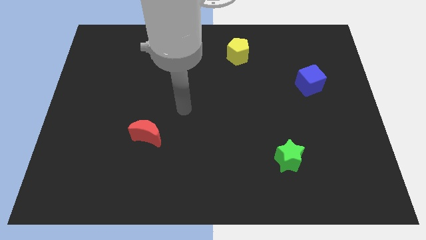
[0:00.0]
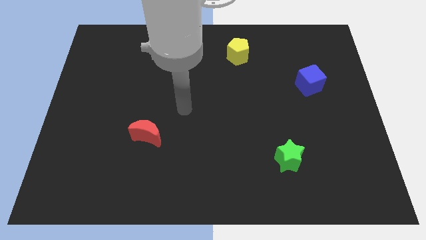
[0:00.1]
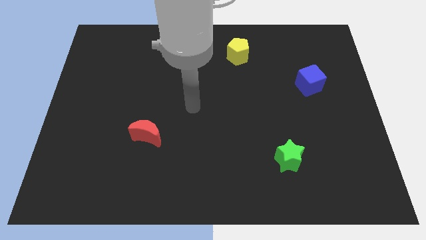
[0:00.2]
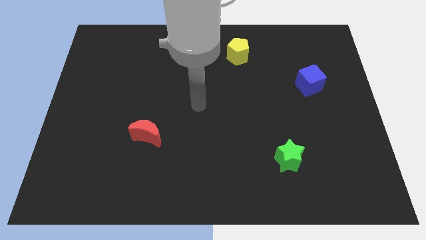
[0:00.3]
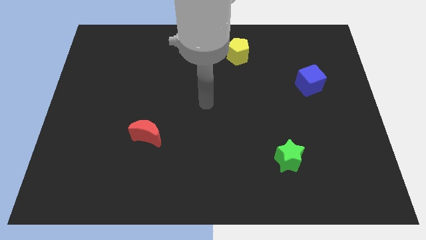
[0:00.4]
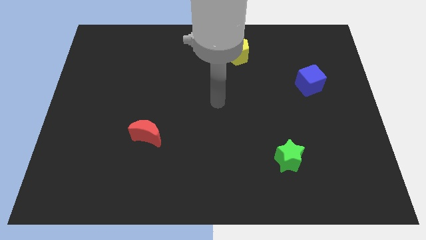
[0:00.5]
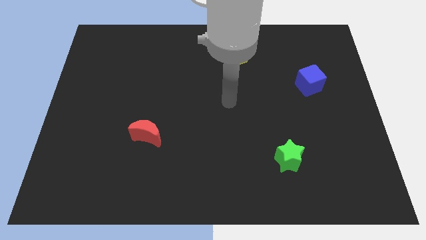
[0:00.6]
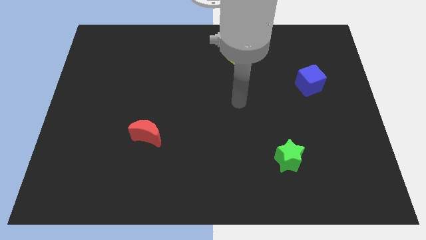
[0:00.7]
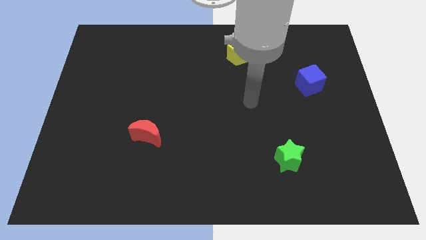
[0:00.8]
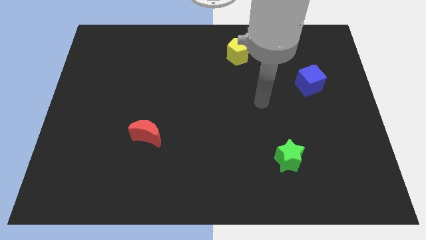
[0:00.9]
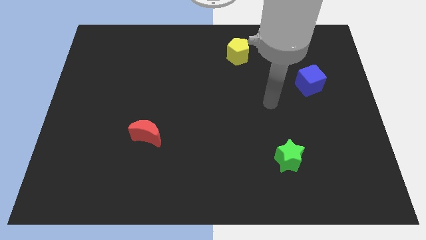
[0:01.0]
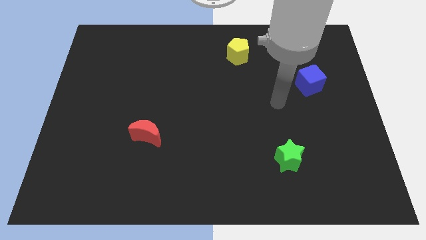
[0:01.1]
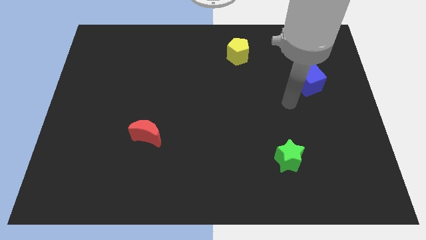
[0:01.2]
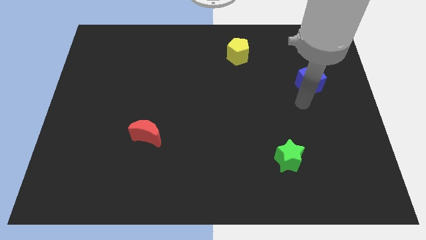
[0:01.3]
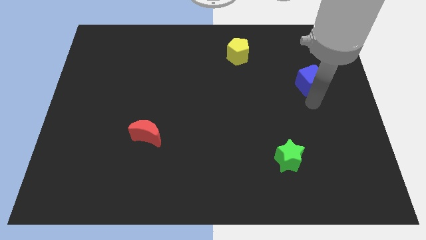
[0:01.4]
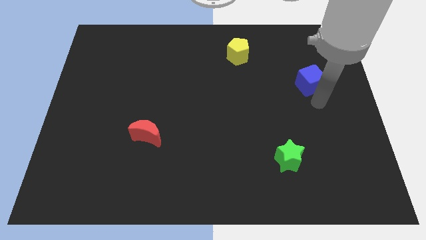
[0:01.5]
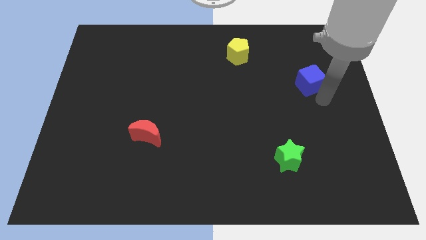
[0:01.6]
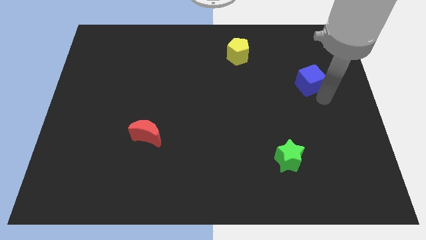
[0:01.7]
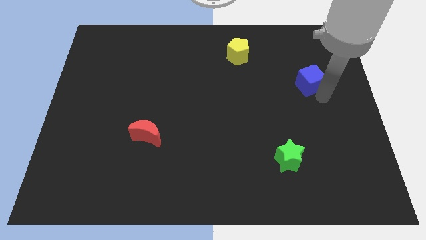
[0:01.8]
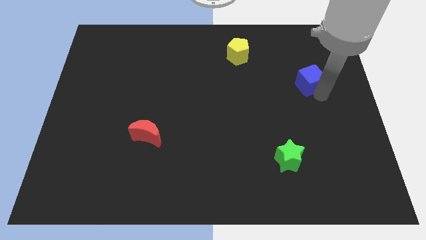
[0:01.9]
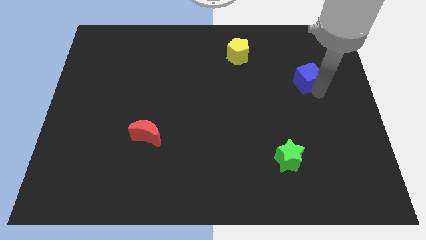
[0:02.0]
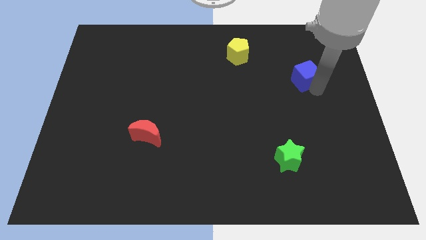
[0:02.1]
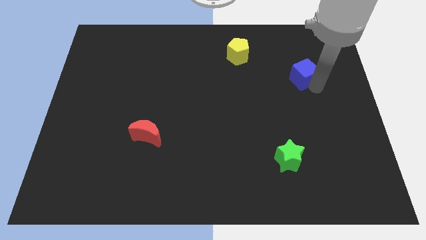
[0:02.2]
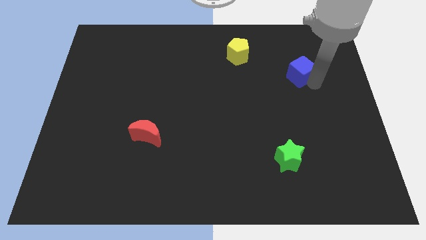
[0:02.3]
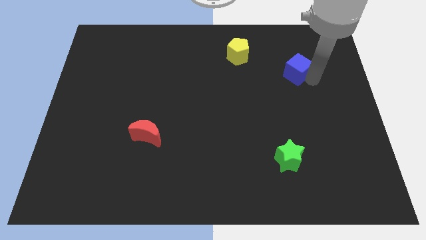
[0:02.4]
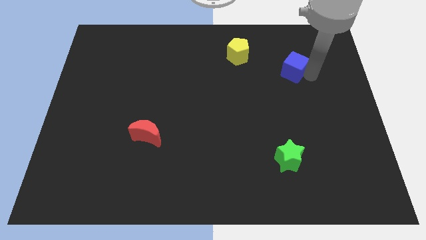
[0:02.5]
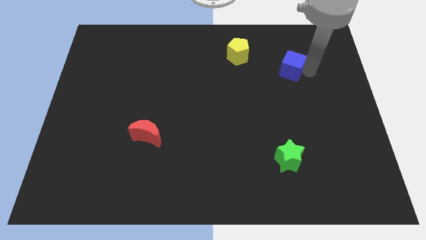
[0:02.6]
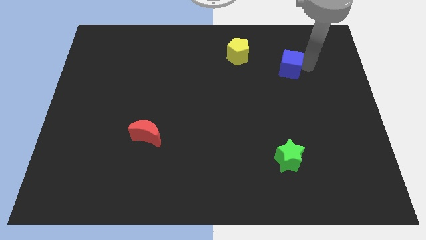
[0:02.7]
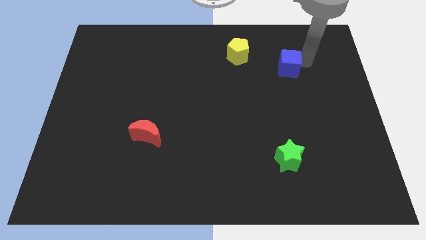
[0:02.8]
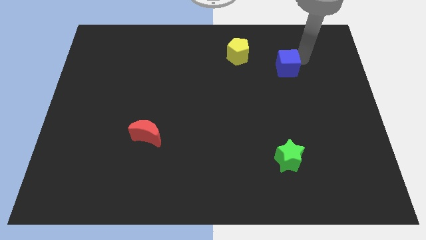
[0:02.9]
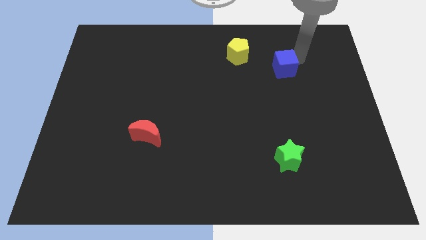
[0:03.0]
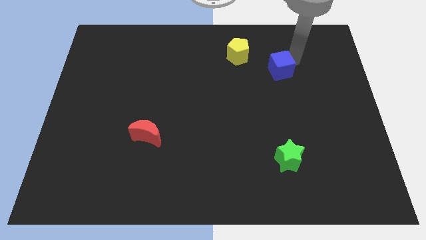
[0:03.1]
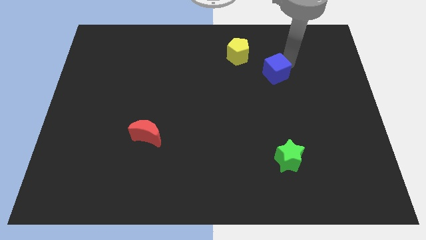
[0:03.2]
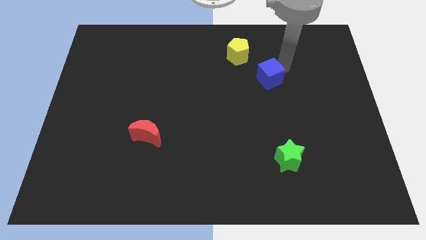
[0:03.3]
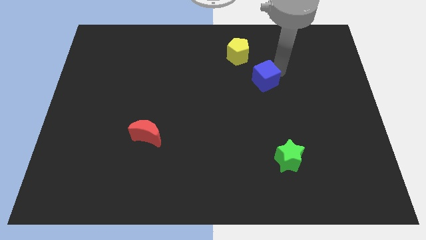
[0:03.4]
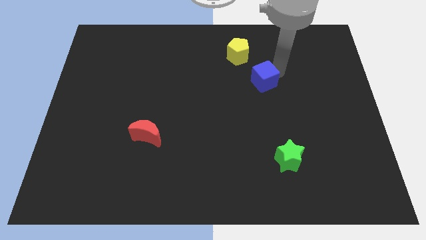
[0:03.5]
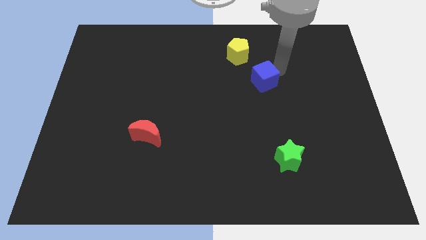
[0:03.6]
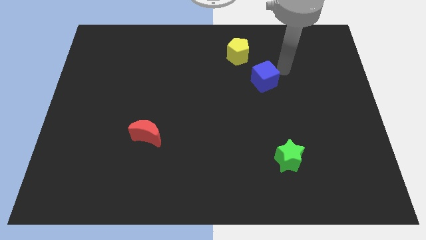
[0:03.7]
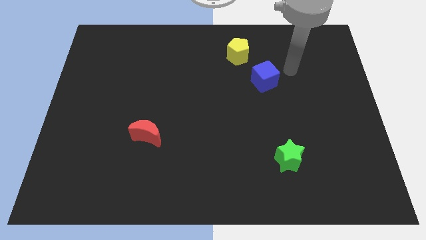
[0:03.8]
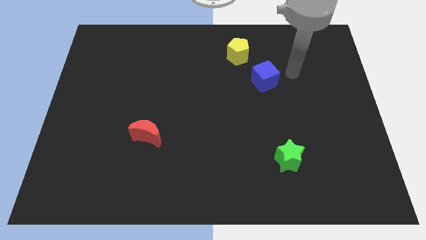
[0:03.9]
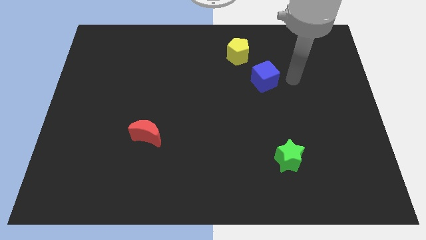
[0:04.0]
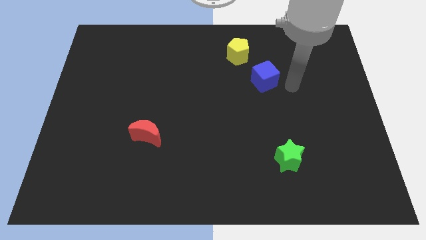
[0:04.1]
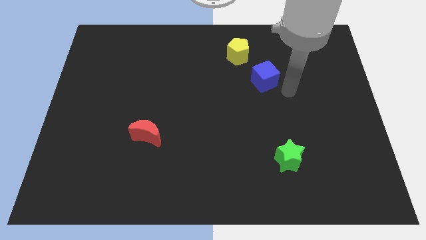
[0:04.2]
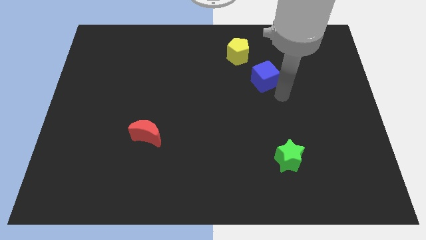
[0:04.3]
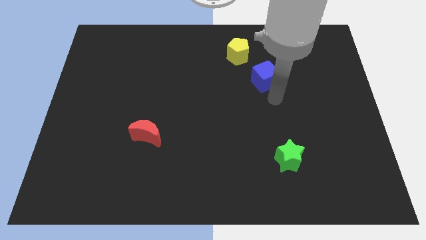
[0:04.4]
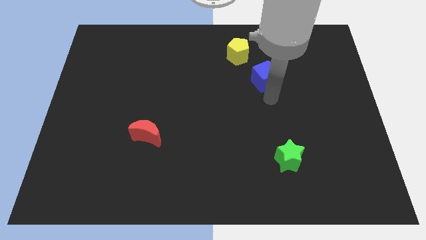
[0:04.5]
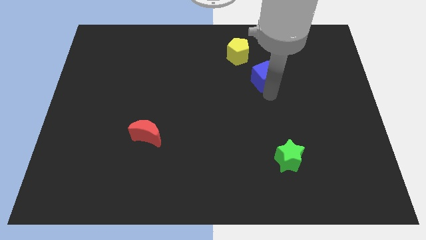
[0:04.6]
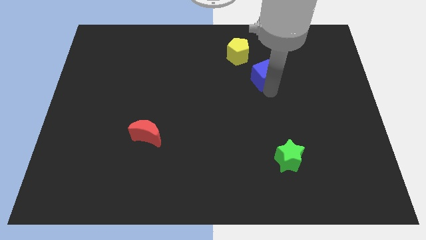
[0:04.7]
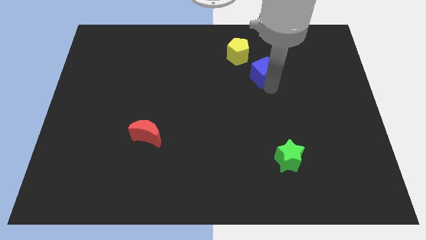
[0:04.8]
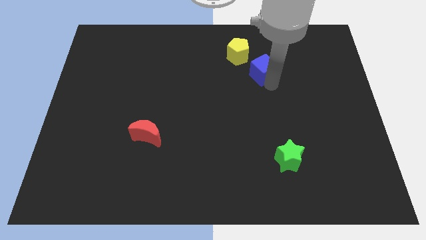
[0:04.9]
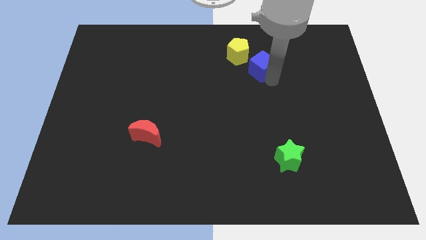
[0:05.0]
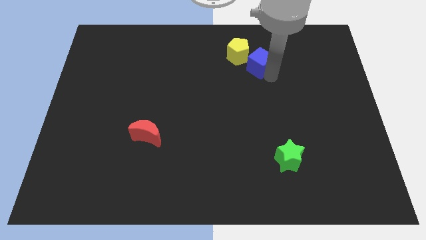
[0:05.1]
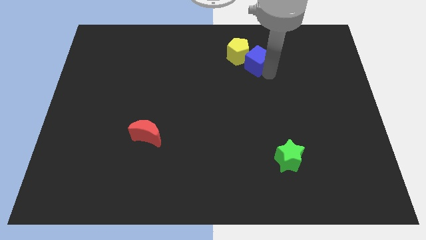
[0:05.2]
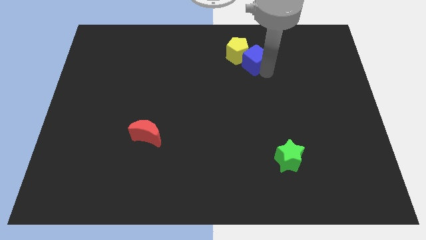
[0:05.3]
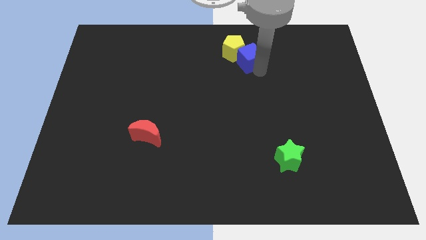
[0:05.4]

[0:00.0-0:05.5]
slide the blue block to the yellow block

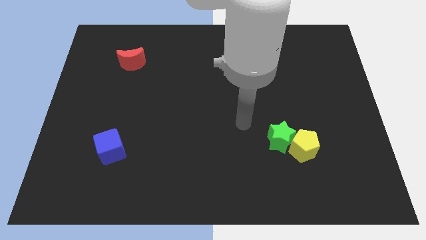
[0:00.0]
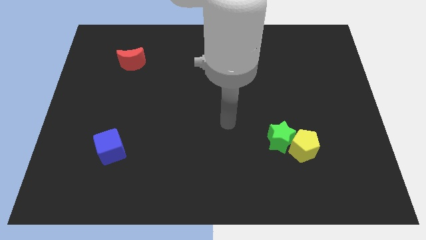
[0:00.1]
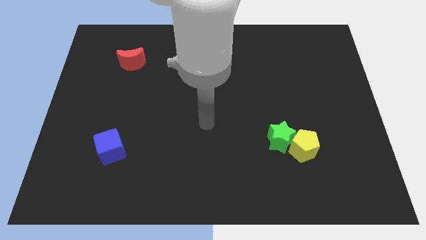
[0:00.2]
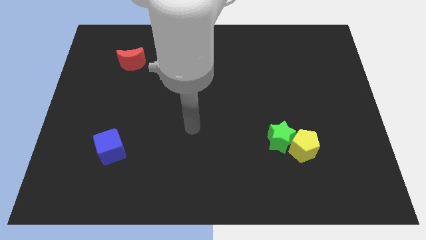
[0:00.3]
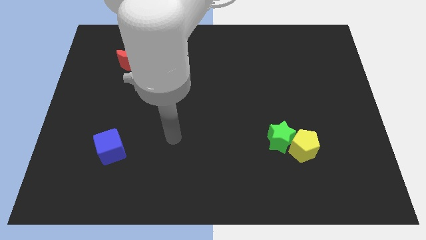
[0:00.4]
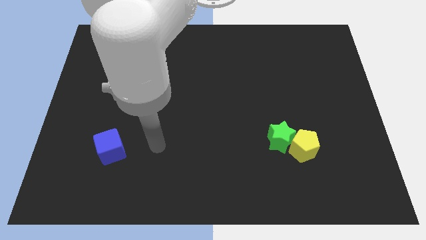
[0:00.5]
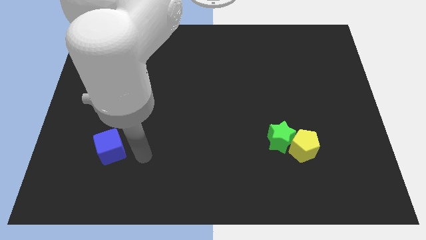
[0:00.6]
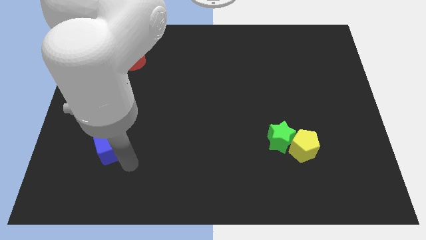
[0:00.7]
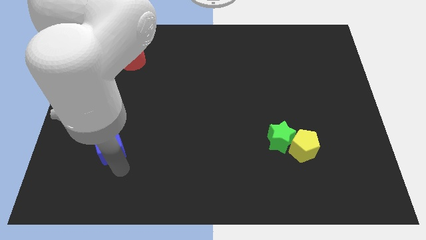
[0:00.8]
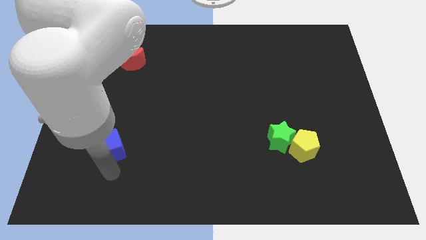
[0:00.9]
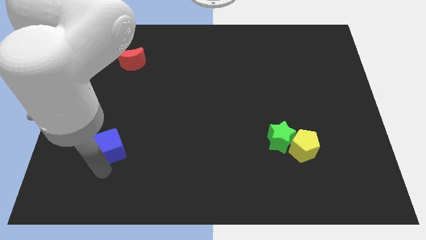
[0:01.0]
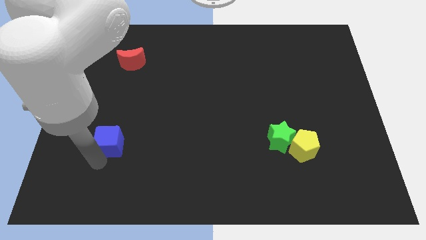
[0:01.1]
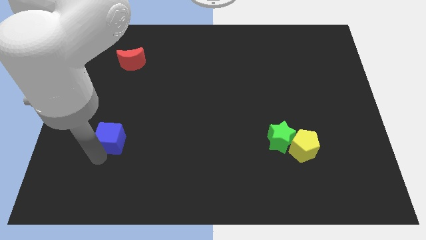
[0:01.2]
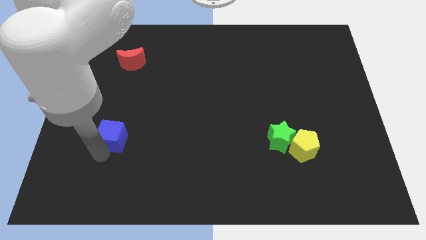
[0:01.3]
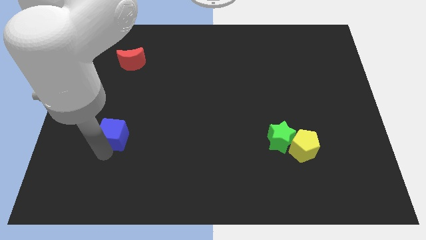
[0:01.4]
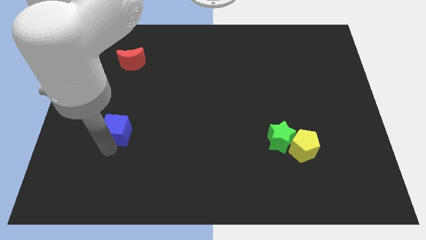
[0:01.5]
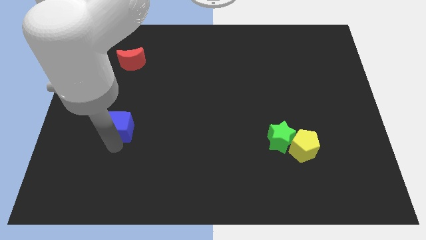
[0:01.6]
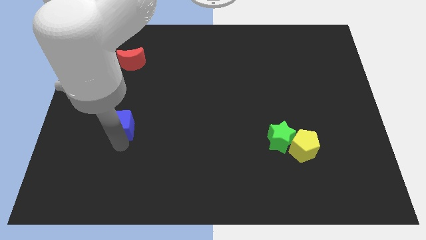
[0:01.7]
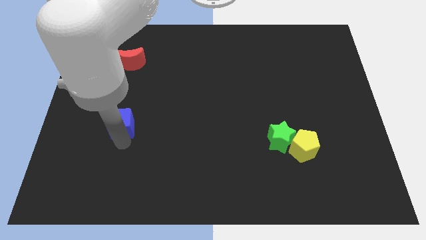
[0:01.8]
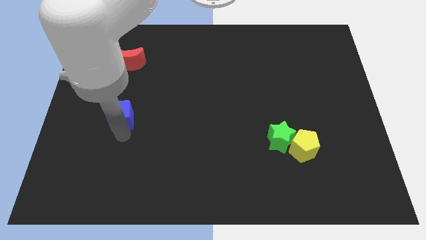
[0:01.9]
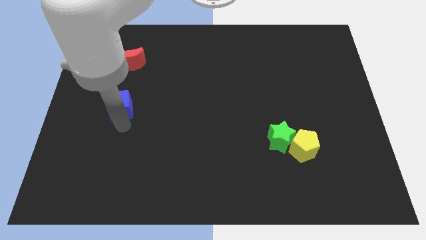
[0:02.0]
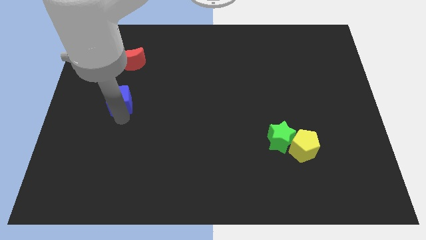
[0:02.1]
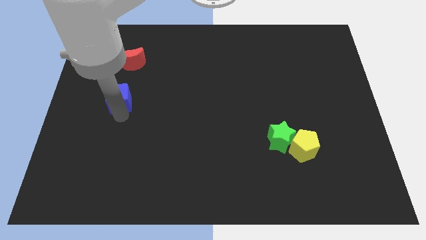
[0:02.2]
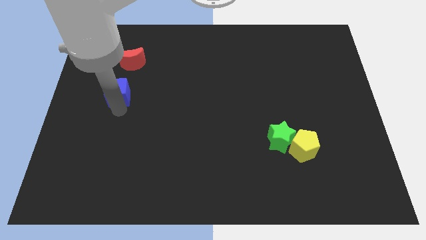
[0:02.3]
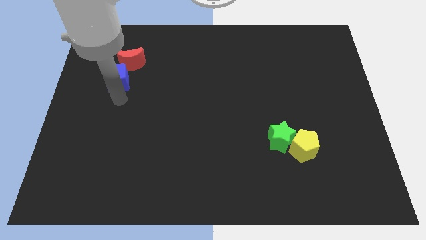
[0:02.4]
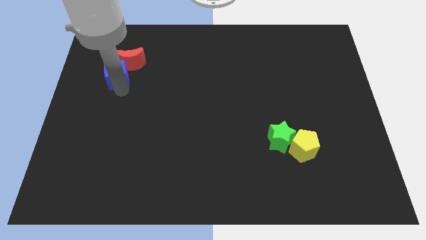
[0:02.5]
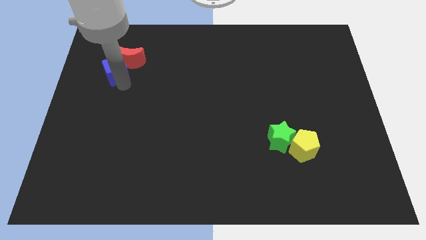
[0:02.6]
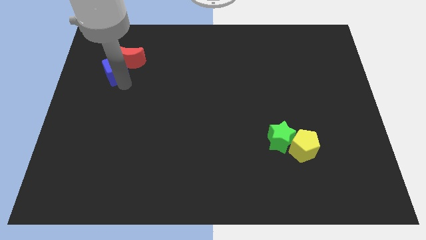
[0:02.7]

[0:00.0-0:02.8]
push the blue cube close to the red block
